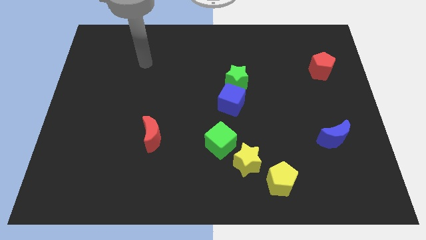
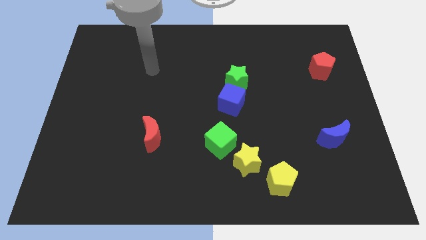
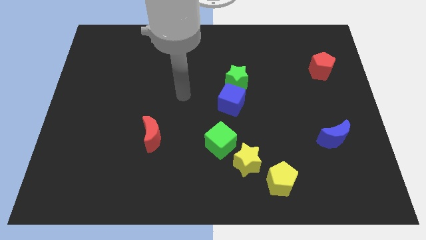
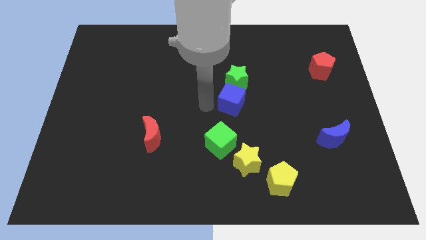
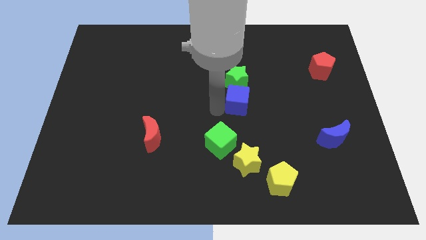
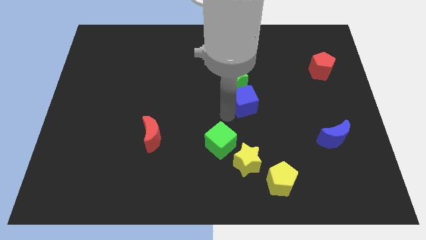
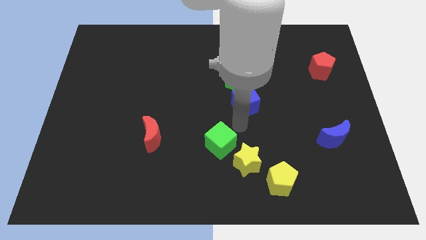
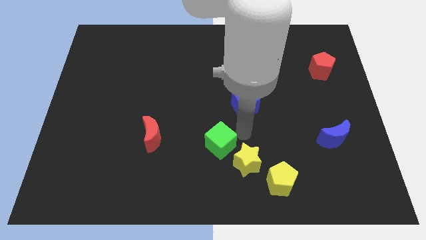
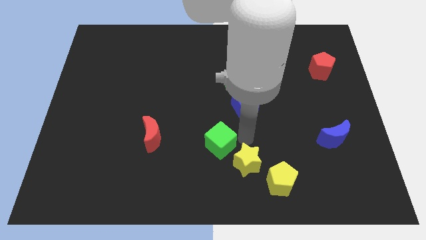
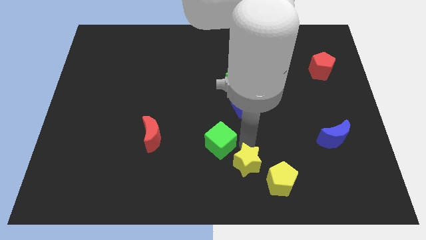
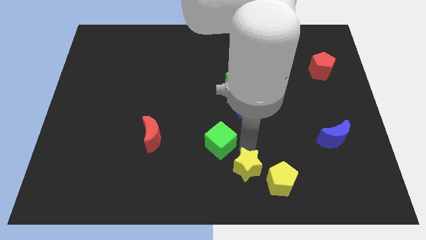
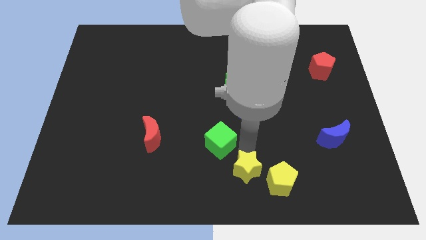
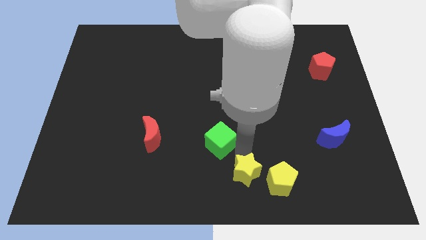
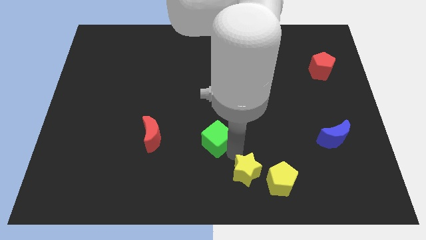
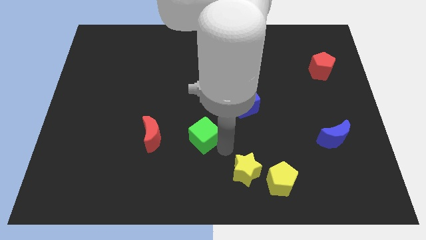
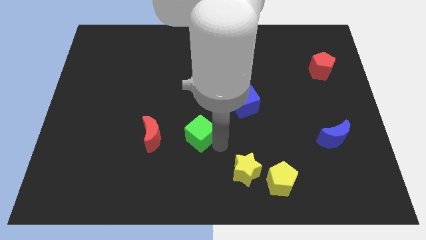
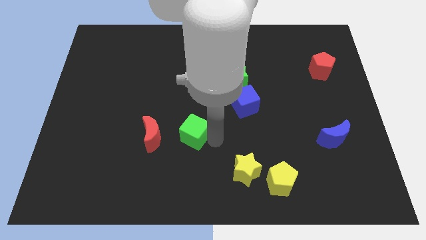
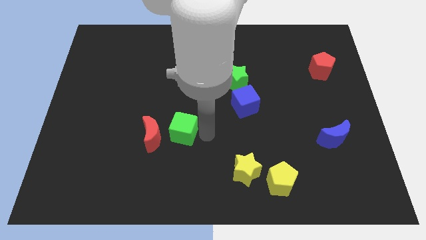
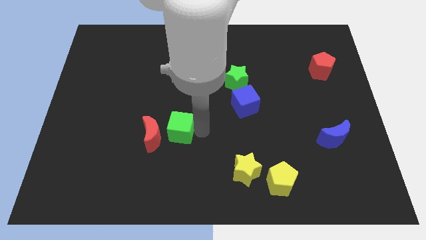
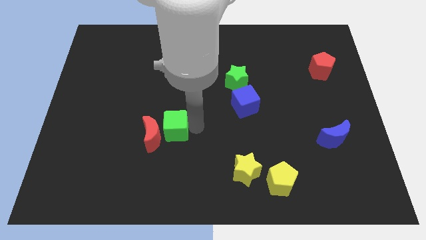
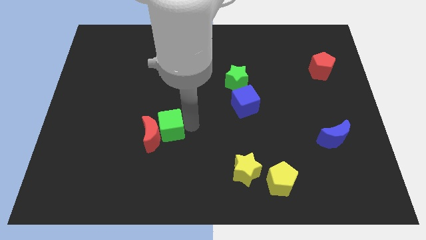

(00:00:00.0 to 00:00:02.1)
push the green cube next to the red moon

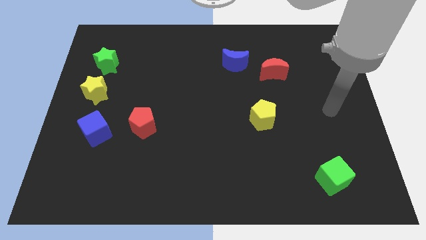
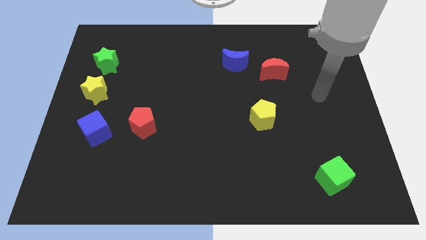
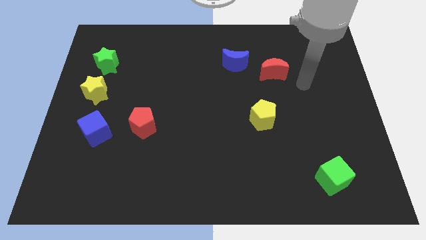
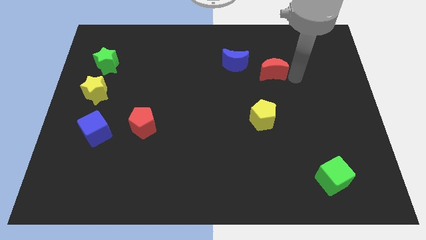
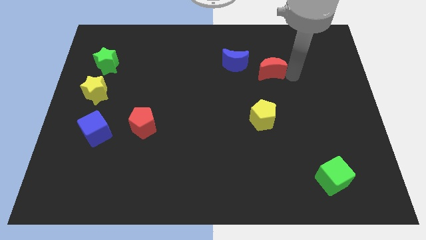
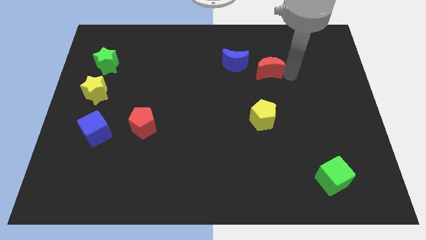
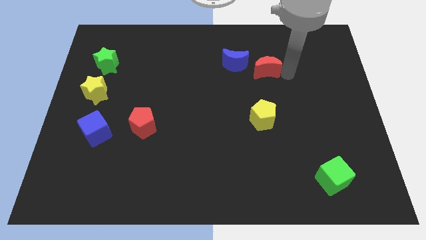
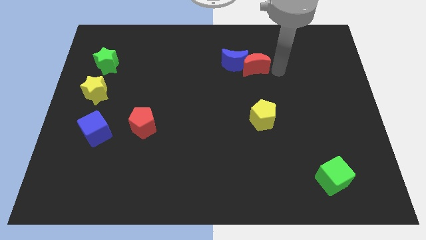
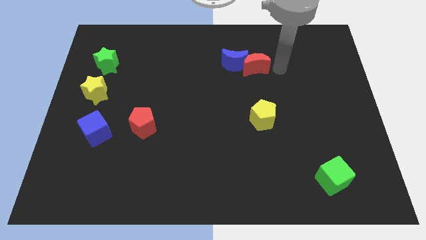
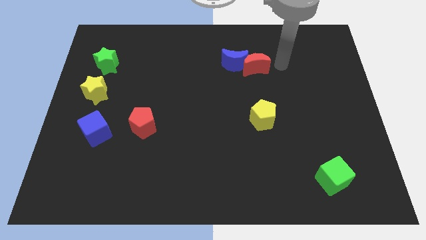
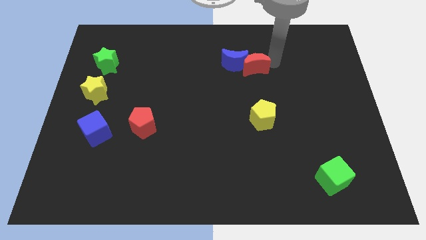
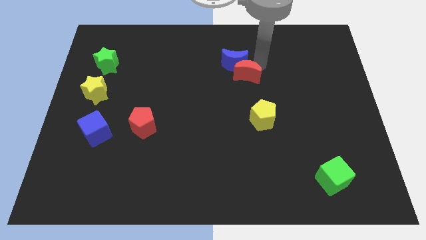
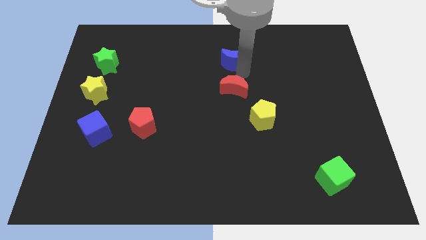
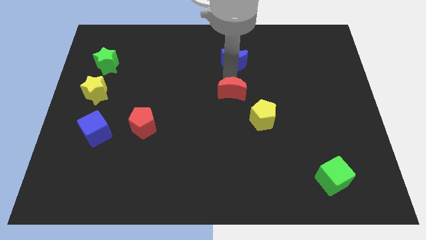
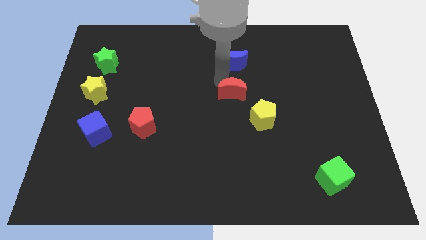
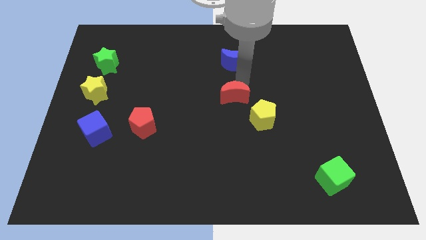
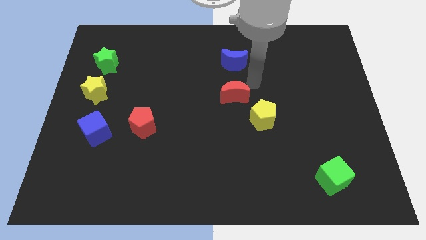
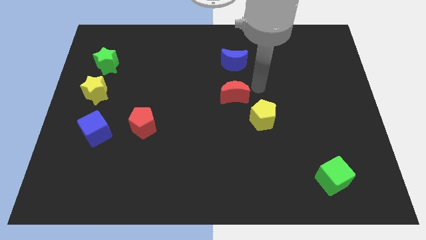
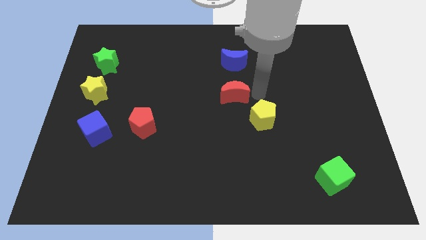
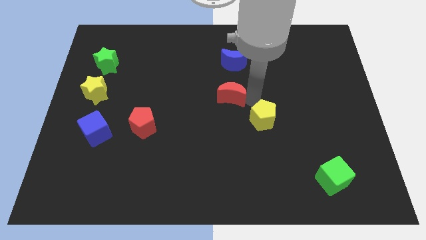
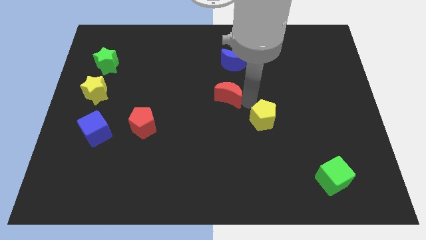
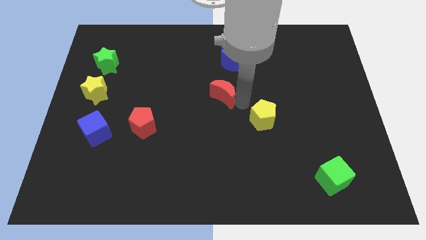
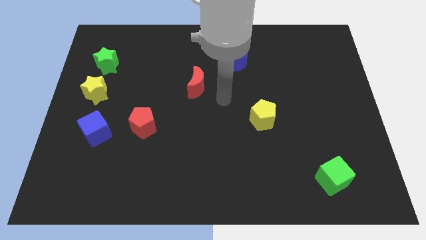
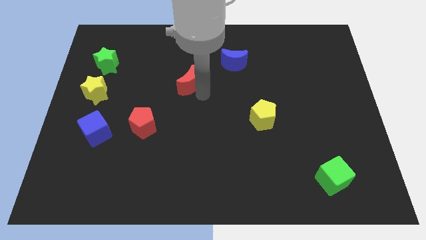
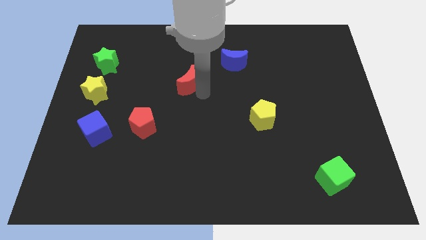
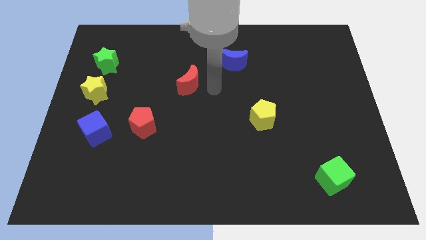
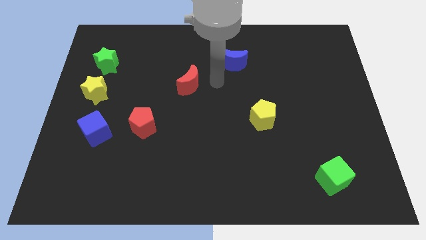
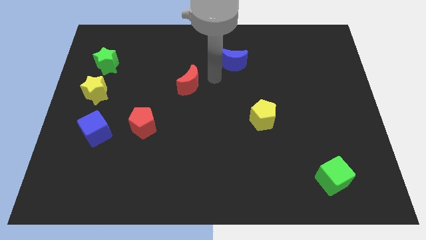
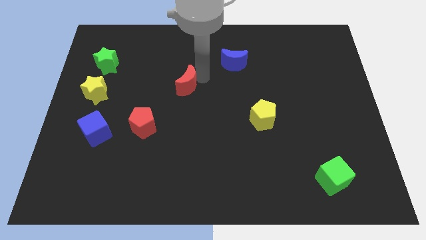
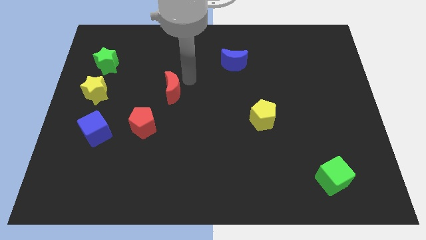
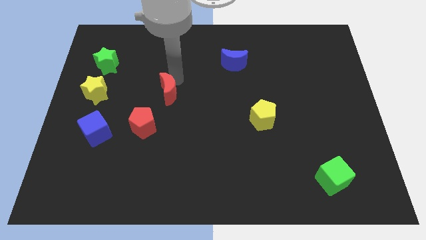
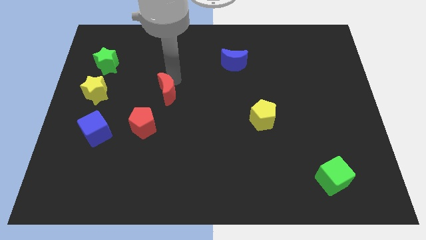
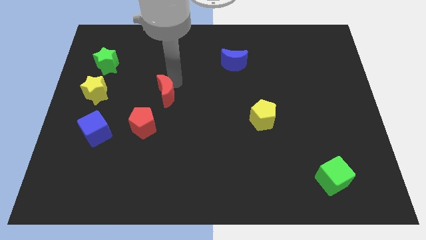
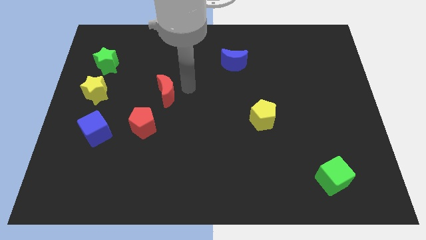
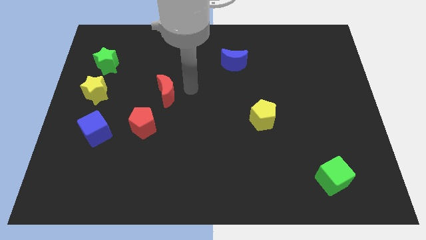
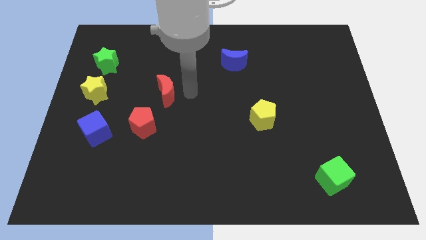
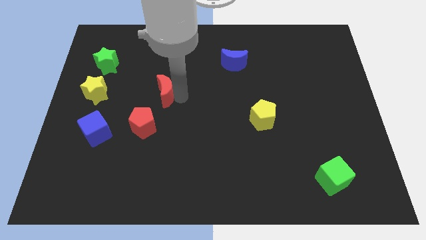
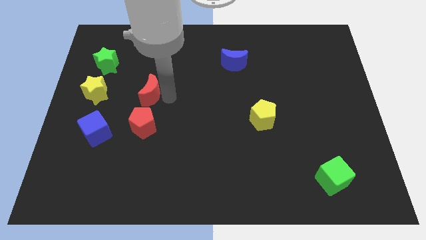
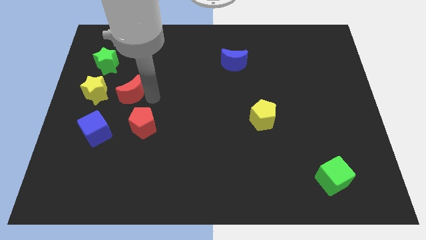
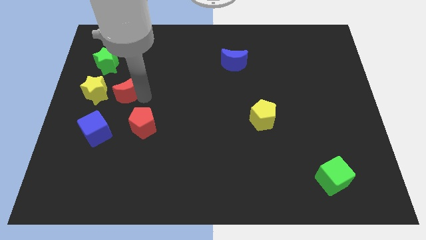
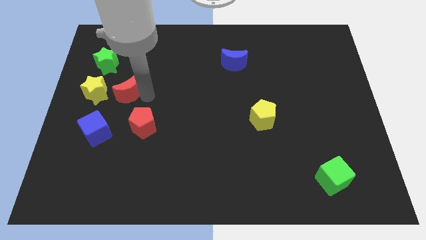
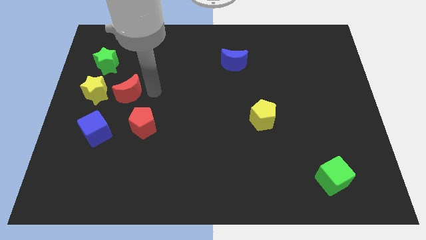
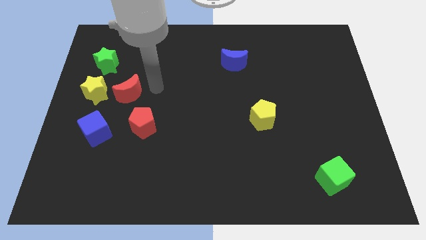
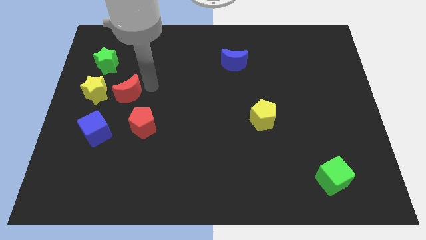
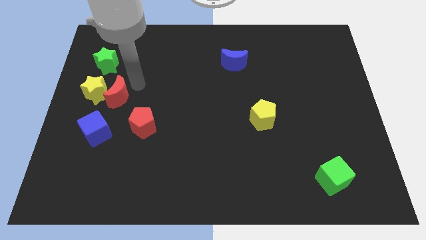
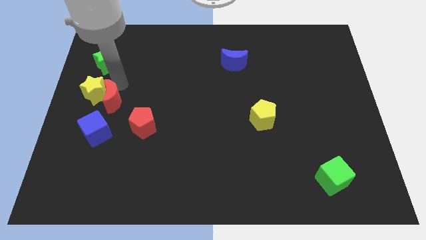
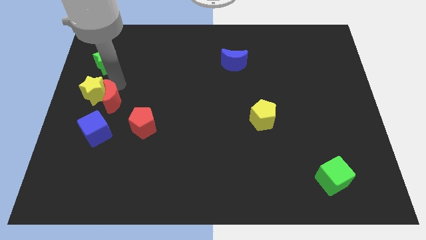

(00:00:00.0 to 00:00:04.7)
move the red moon towards the yellow star

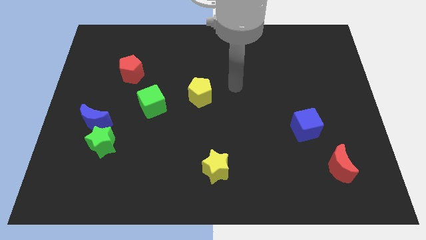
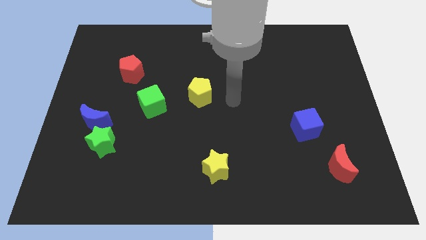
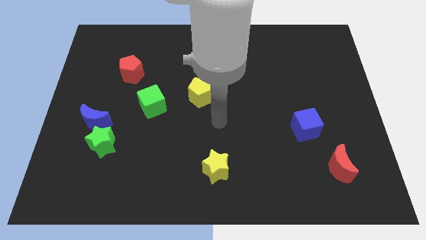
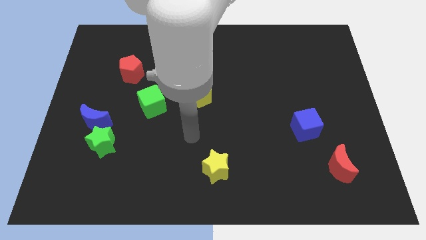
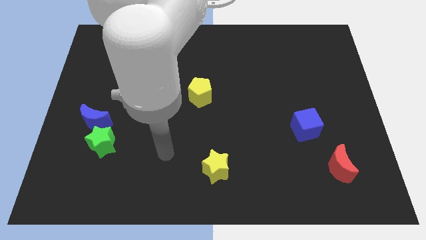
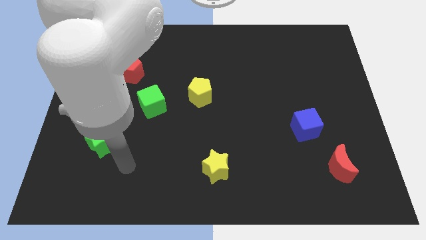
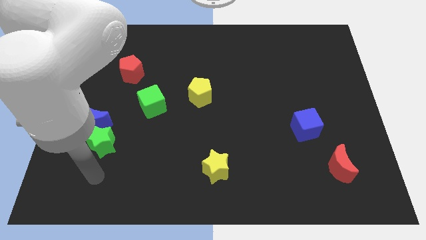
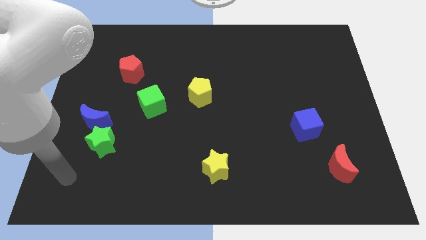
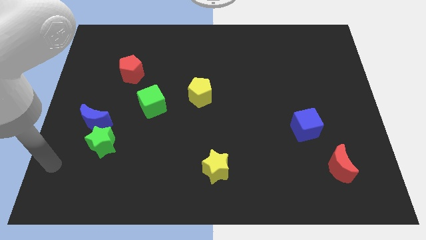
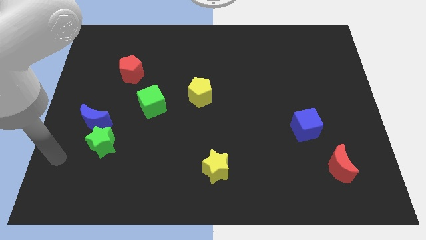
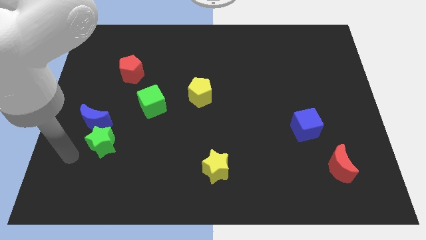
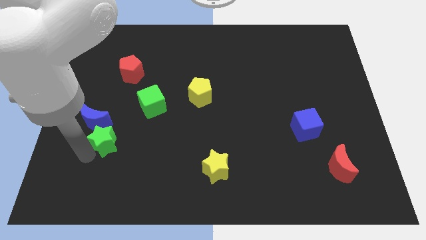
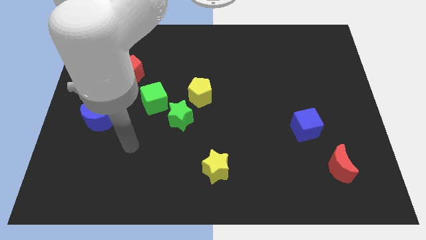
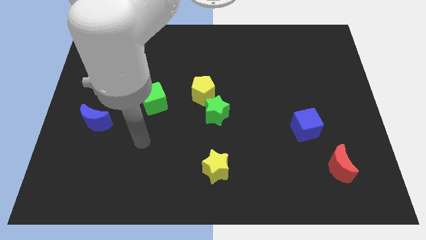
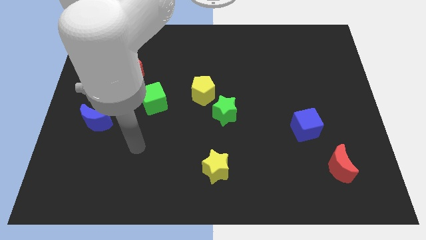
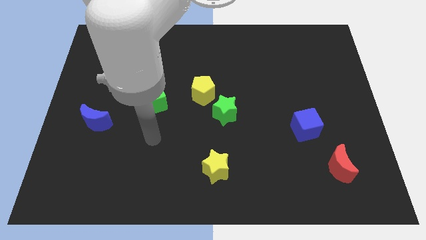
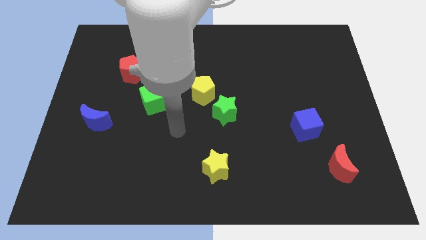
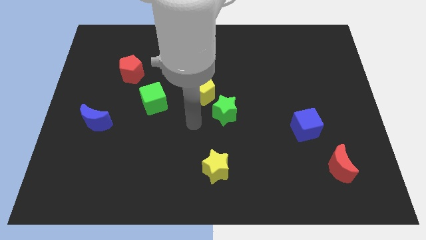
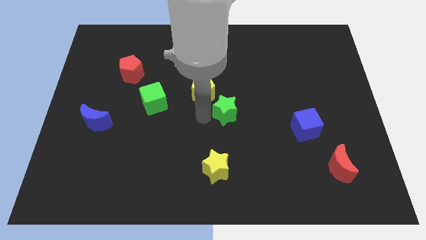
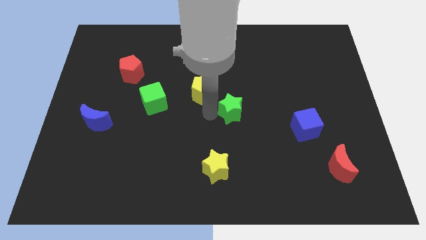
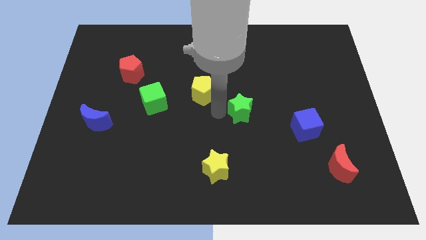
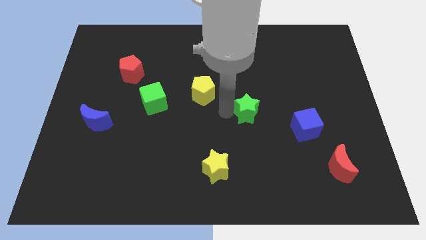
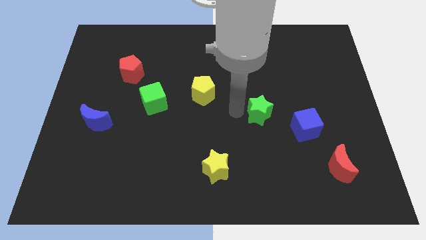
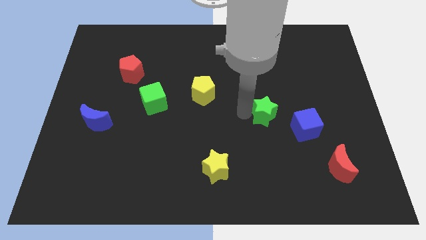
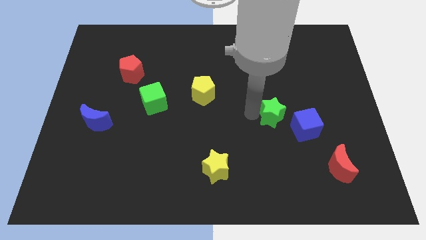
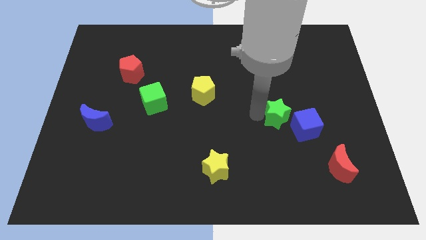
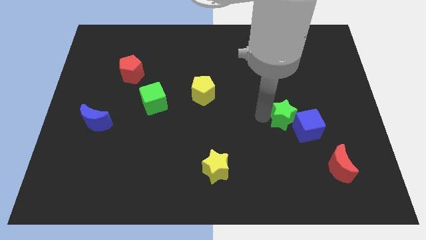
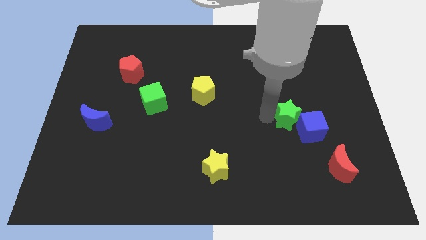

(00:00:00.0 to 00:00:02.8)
put the green star to the blue cube
